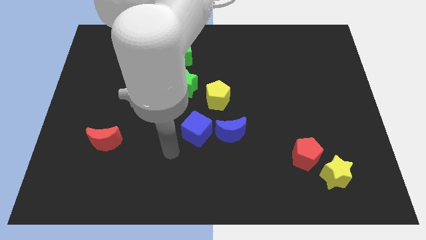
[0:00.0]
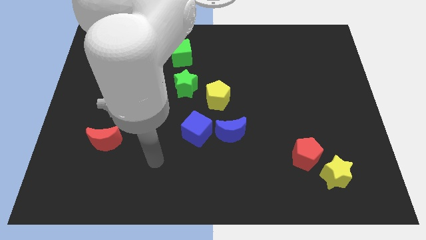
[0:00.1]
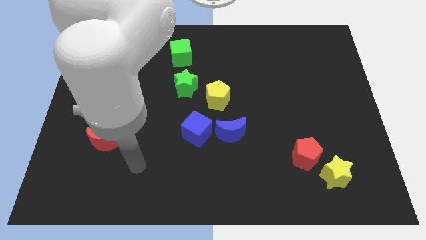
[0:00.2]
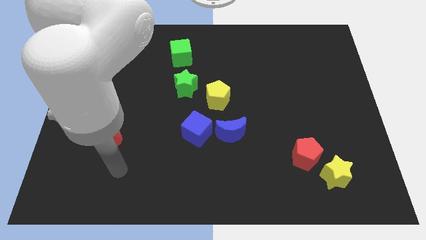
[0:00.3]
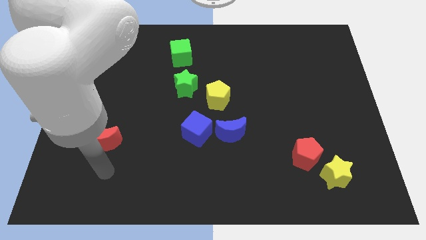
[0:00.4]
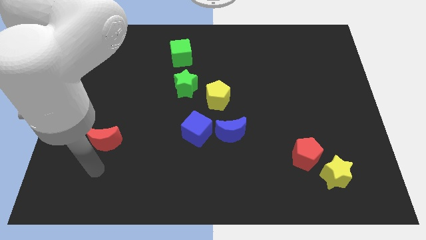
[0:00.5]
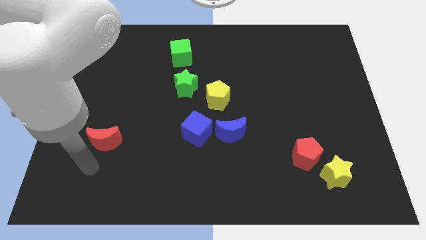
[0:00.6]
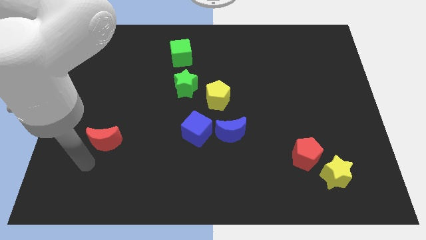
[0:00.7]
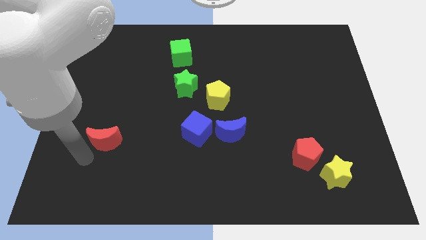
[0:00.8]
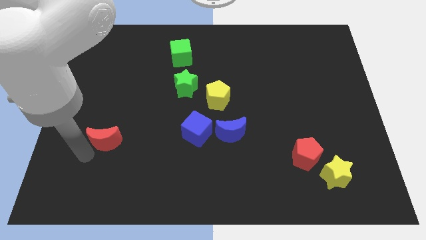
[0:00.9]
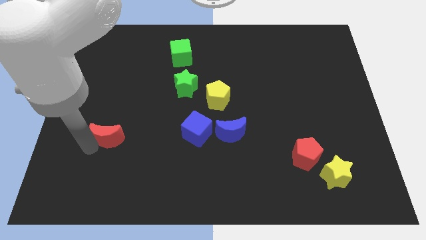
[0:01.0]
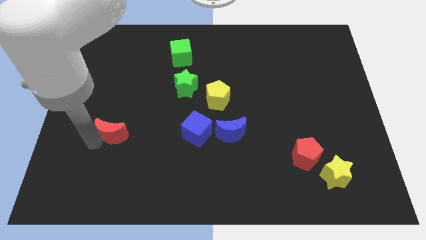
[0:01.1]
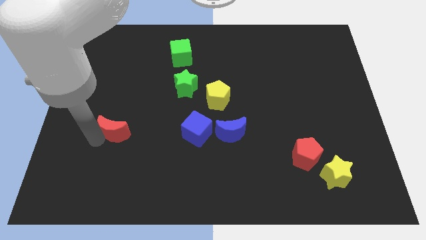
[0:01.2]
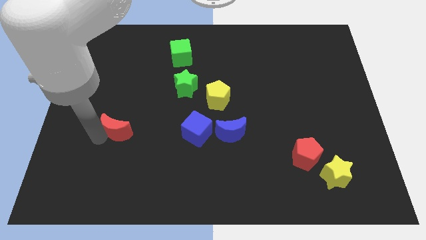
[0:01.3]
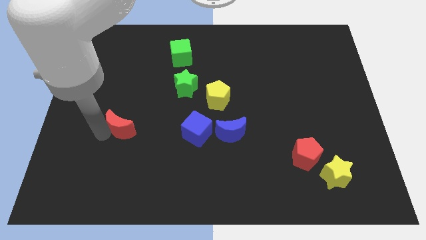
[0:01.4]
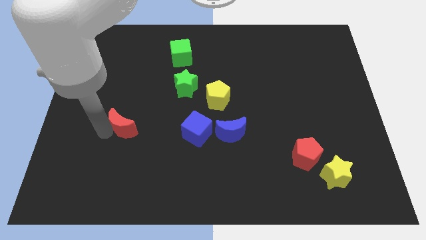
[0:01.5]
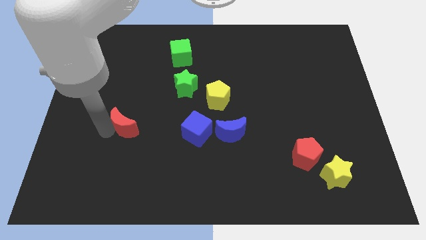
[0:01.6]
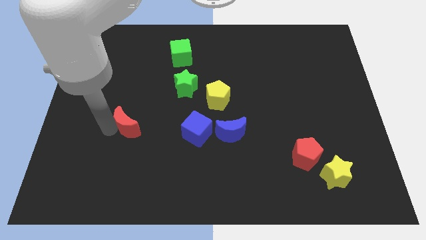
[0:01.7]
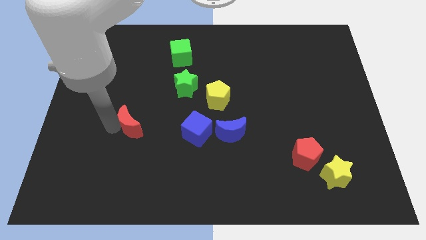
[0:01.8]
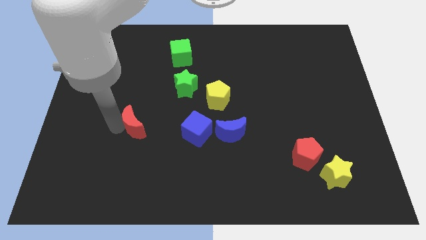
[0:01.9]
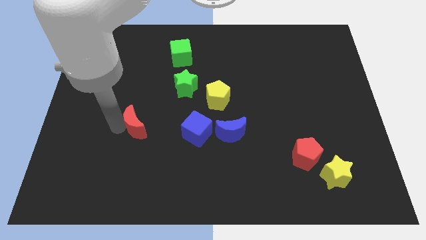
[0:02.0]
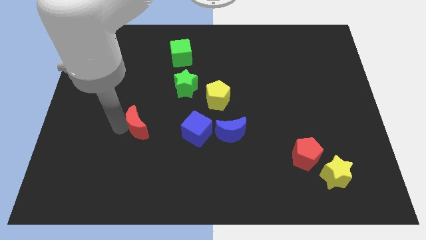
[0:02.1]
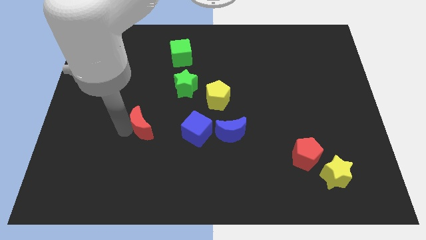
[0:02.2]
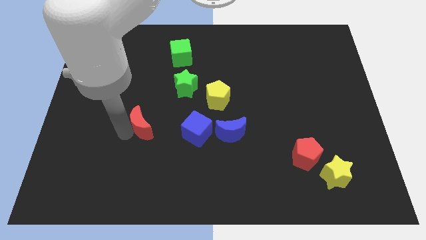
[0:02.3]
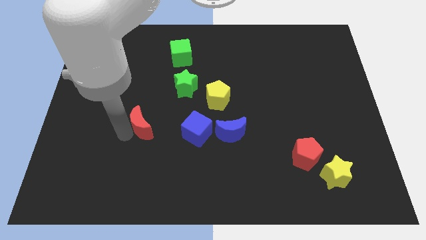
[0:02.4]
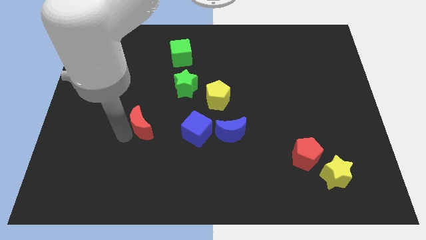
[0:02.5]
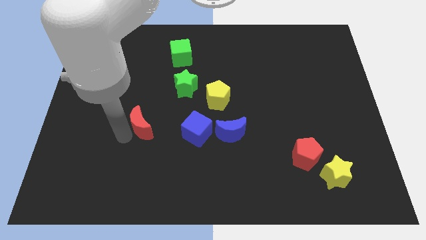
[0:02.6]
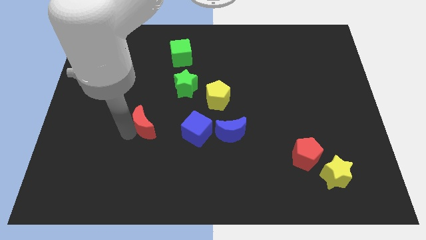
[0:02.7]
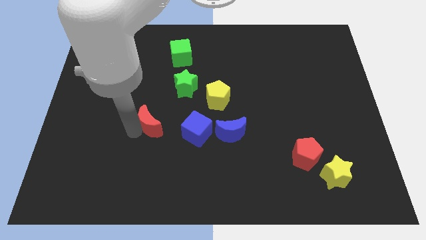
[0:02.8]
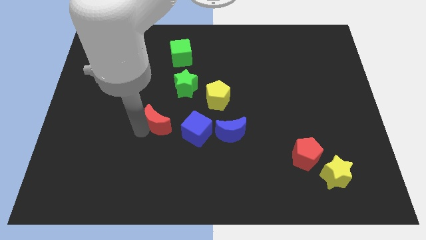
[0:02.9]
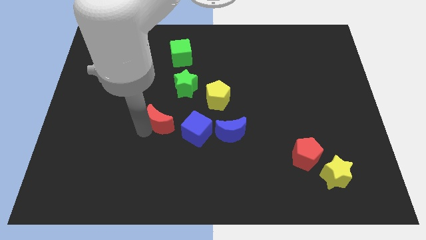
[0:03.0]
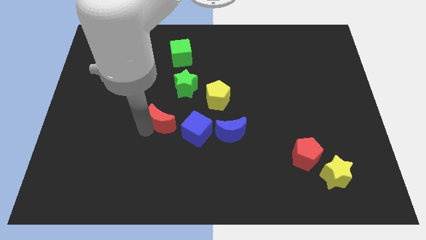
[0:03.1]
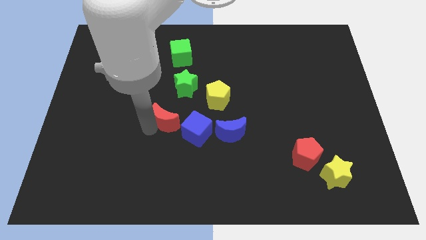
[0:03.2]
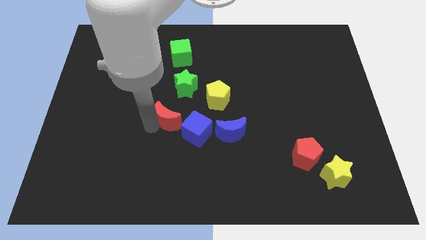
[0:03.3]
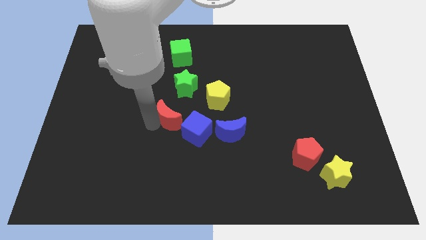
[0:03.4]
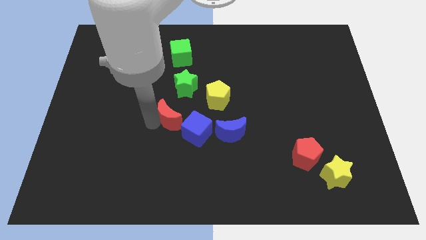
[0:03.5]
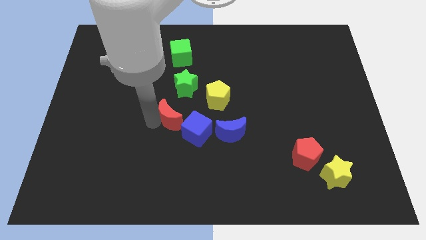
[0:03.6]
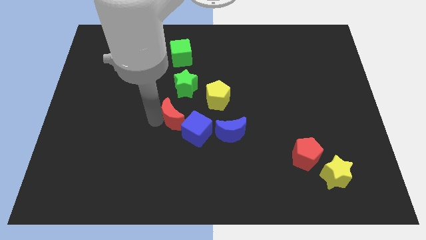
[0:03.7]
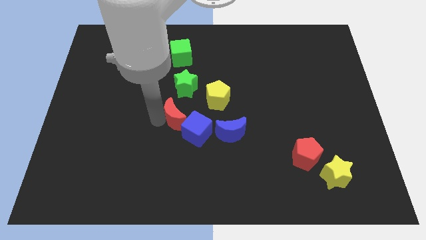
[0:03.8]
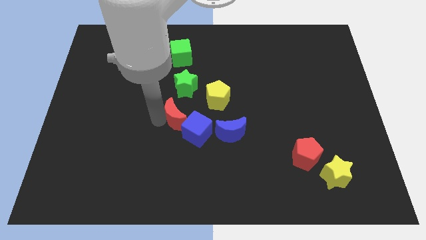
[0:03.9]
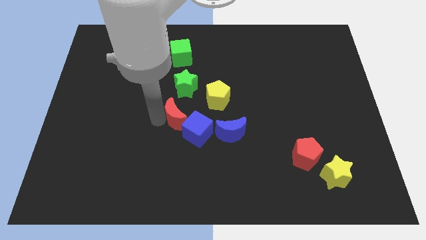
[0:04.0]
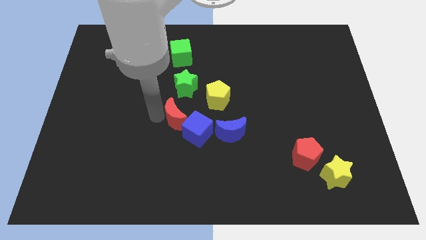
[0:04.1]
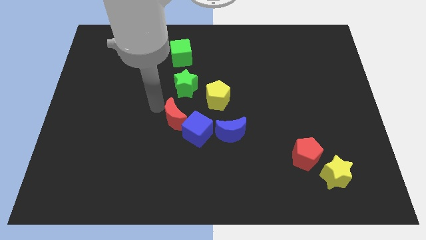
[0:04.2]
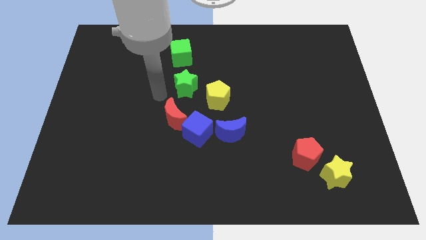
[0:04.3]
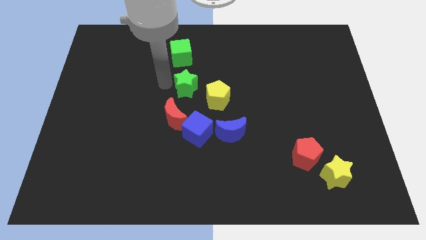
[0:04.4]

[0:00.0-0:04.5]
slide the red crescent into the blue cube

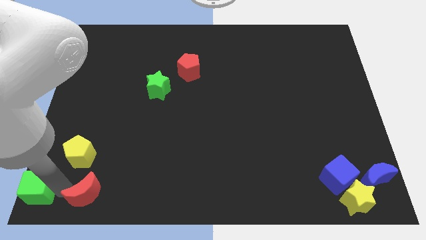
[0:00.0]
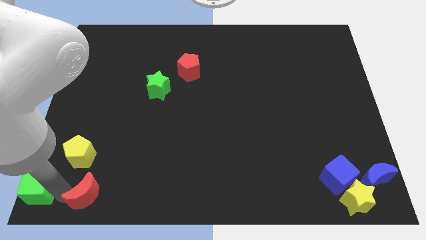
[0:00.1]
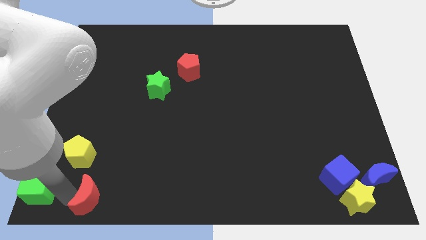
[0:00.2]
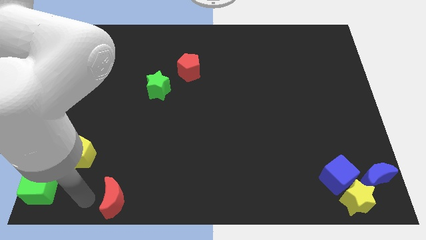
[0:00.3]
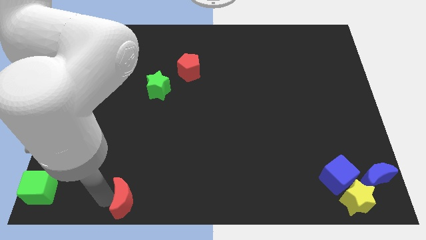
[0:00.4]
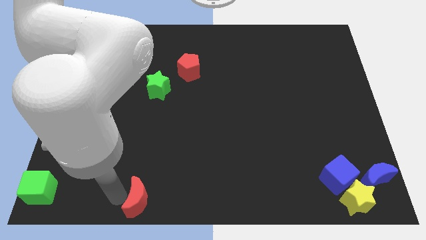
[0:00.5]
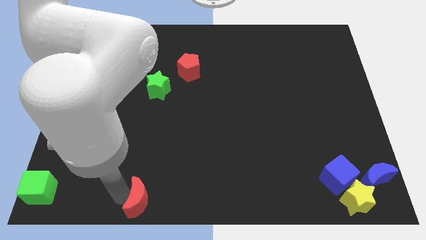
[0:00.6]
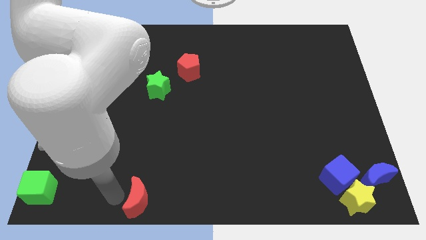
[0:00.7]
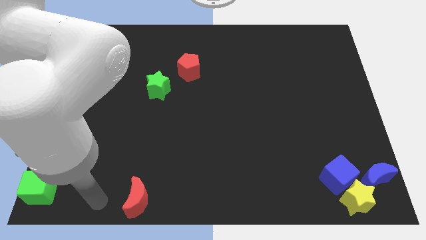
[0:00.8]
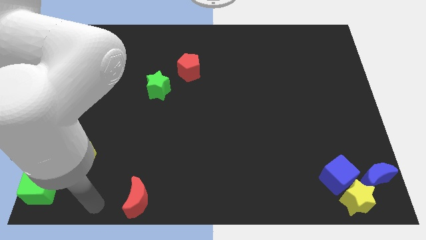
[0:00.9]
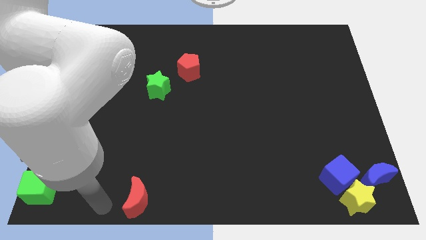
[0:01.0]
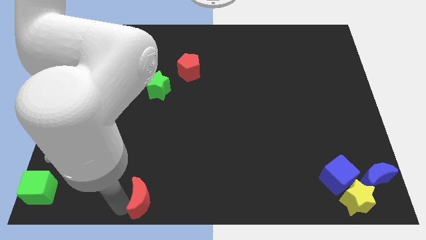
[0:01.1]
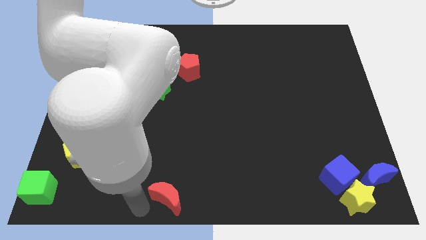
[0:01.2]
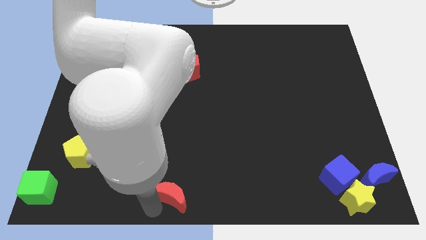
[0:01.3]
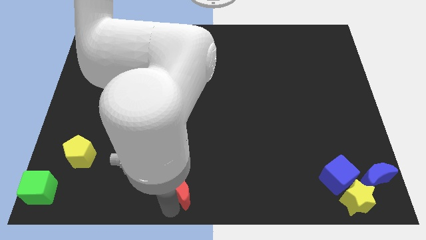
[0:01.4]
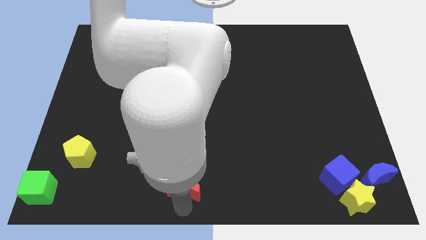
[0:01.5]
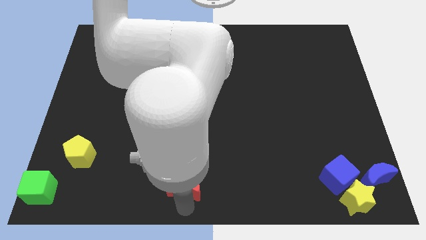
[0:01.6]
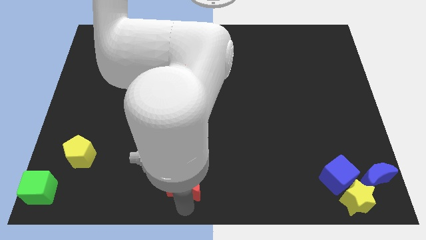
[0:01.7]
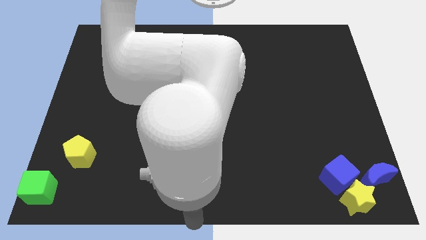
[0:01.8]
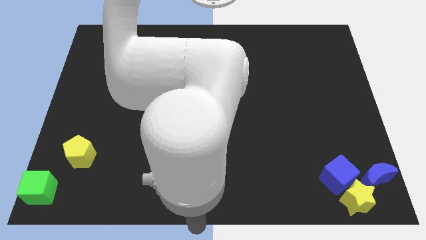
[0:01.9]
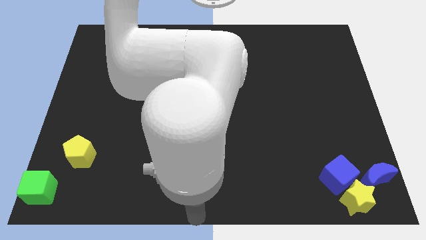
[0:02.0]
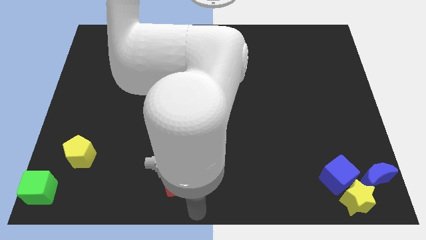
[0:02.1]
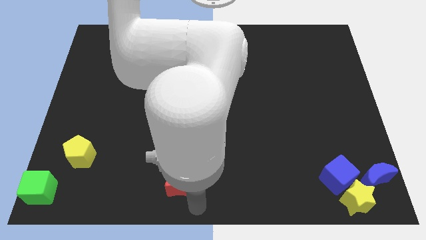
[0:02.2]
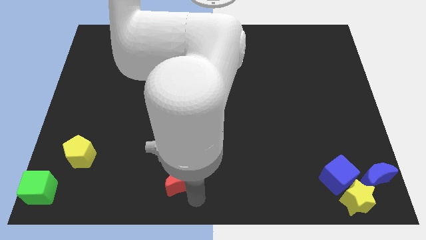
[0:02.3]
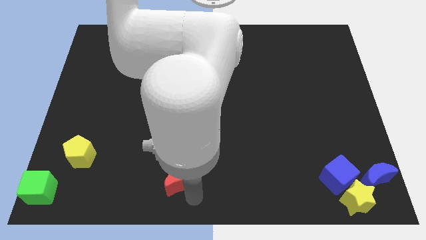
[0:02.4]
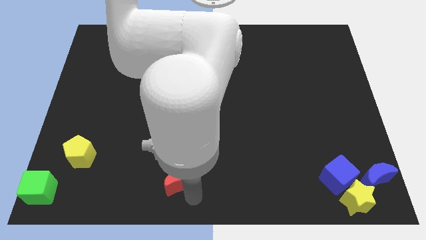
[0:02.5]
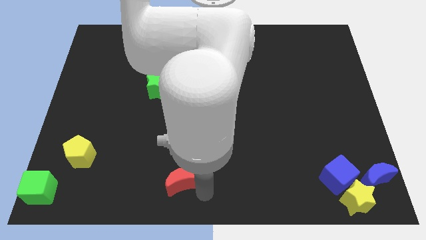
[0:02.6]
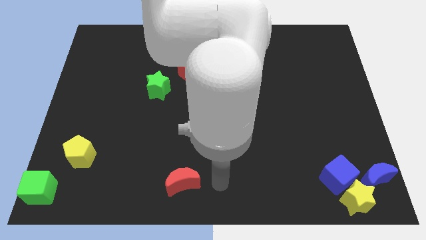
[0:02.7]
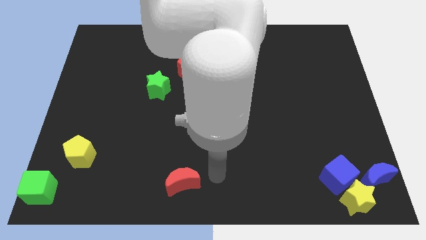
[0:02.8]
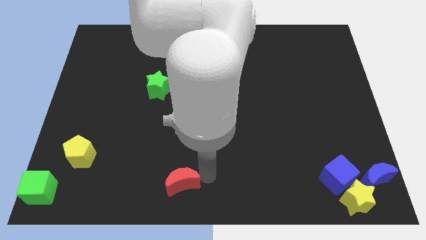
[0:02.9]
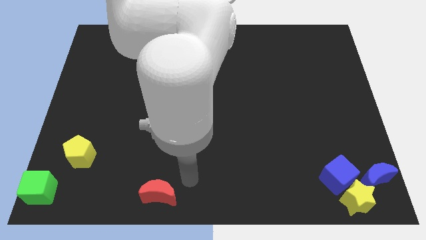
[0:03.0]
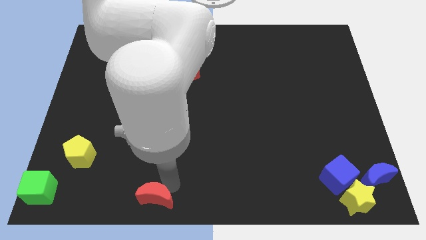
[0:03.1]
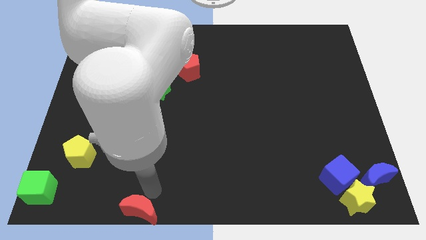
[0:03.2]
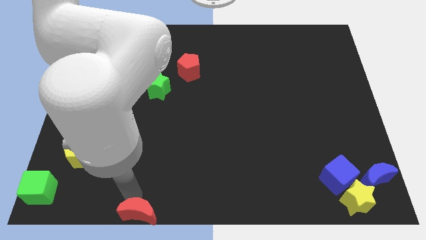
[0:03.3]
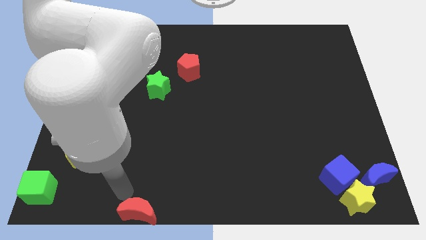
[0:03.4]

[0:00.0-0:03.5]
separate red moon away from green cube

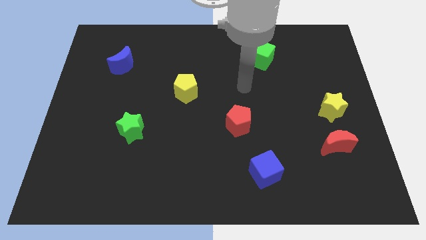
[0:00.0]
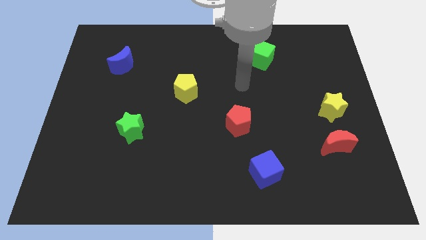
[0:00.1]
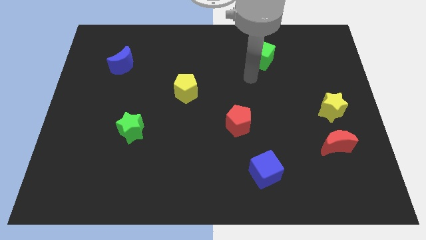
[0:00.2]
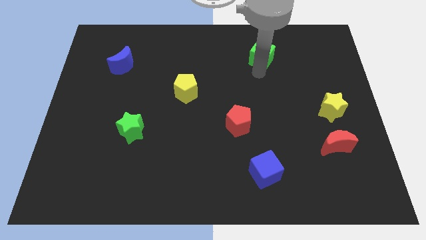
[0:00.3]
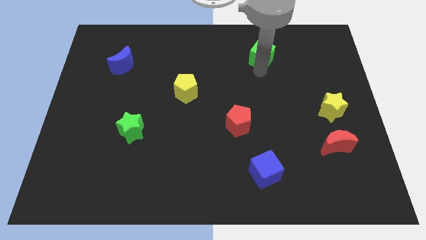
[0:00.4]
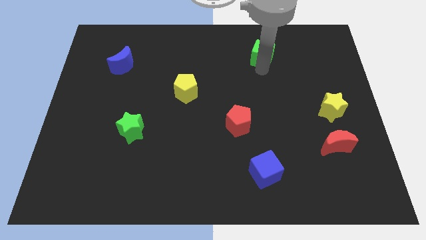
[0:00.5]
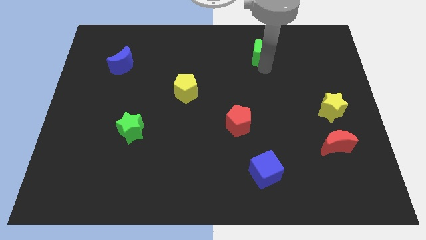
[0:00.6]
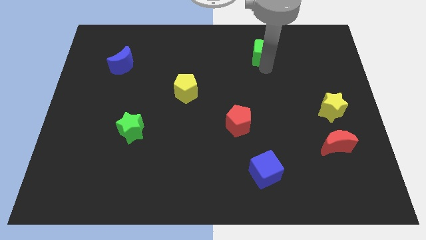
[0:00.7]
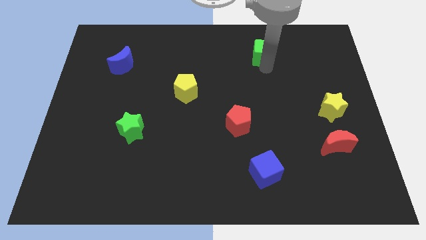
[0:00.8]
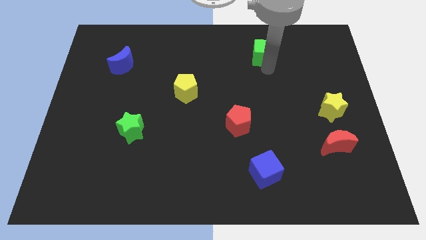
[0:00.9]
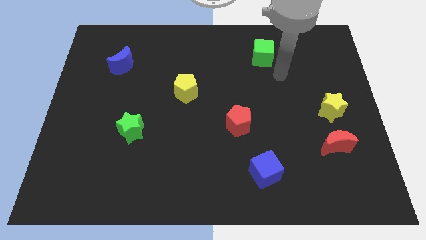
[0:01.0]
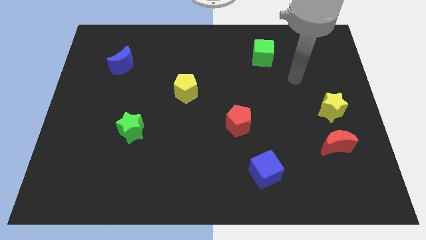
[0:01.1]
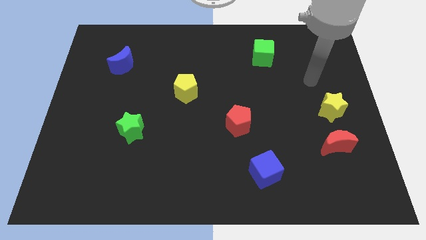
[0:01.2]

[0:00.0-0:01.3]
move the green cube upwards slightly
